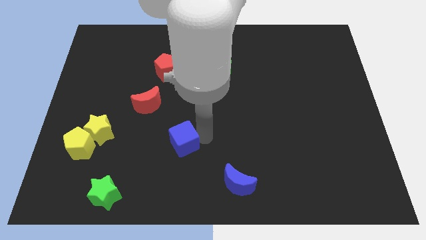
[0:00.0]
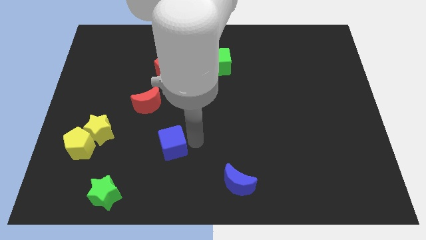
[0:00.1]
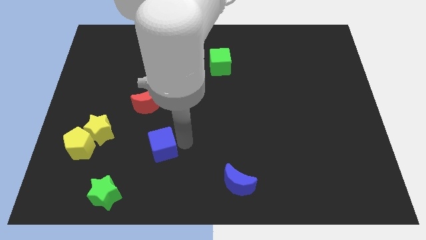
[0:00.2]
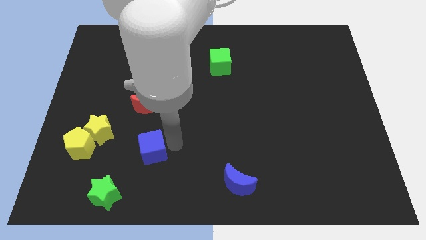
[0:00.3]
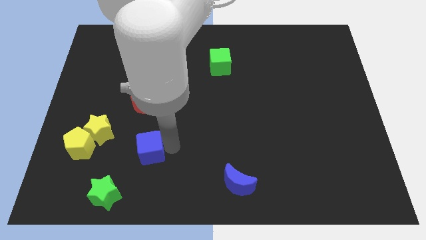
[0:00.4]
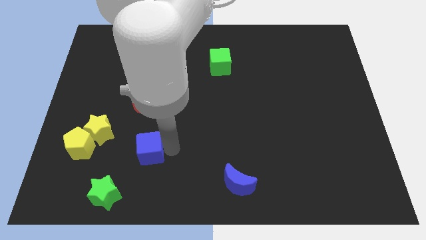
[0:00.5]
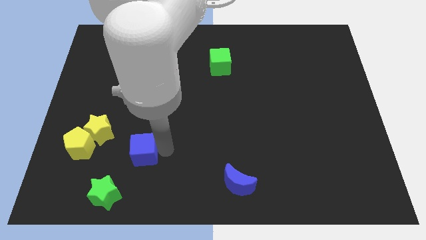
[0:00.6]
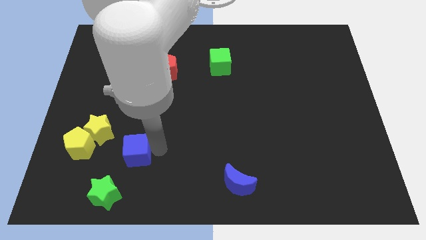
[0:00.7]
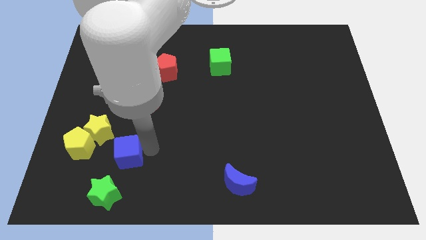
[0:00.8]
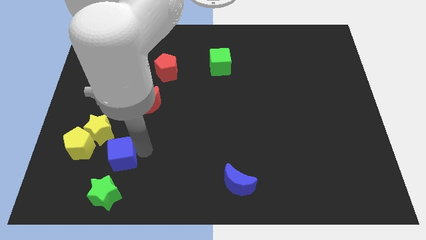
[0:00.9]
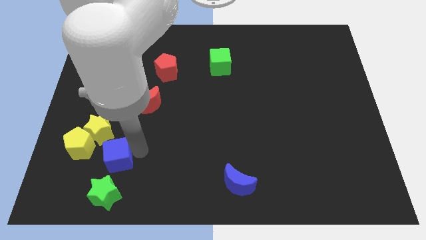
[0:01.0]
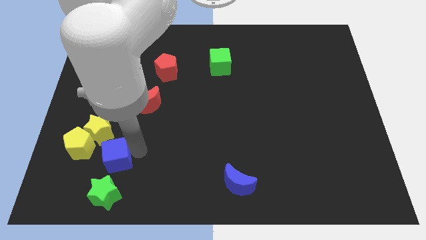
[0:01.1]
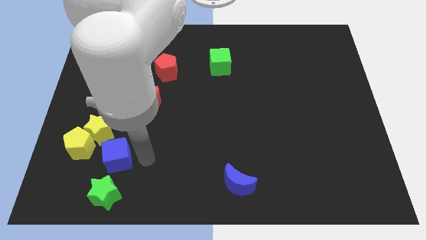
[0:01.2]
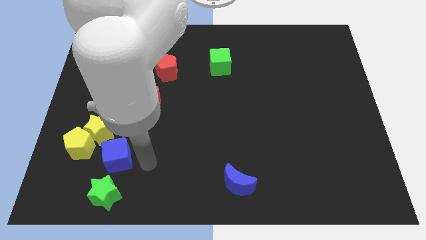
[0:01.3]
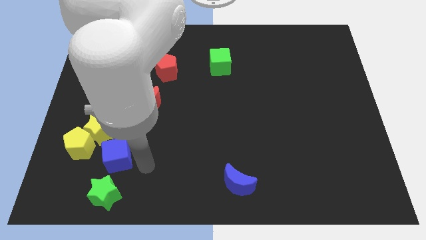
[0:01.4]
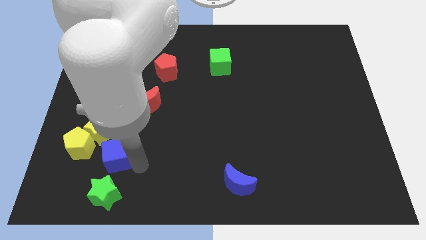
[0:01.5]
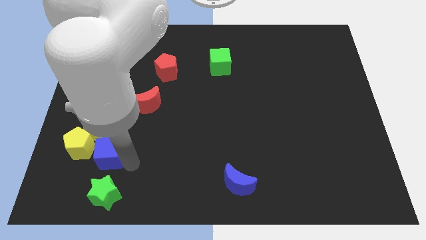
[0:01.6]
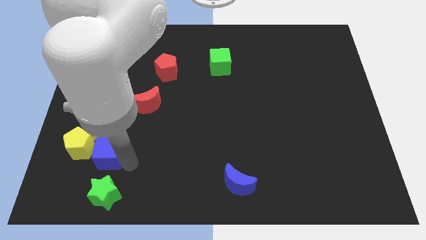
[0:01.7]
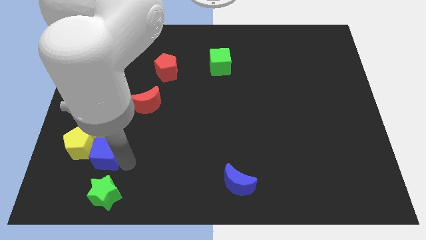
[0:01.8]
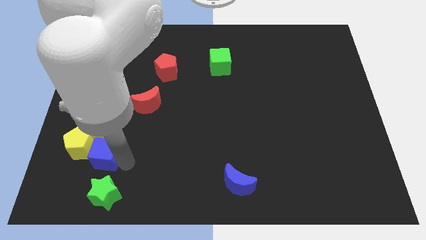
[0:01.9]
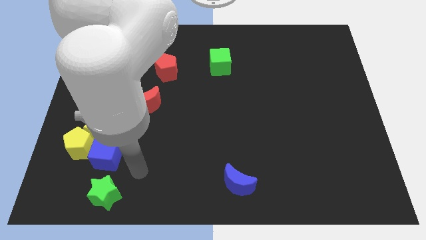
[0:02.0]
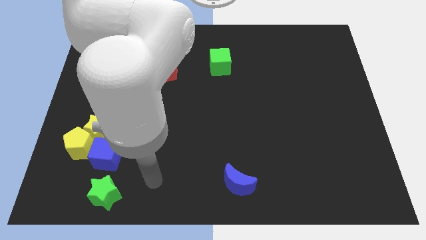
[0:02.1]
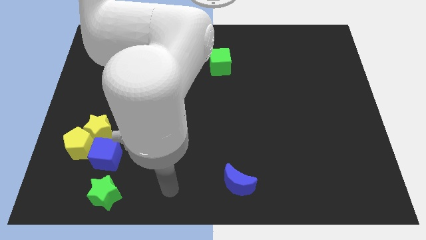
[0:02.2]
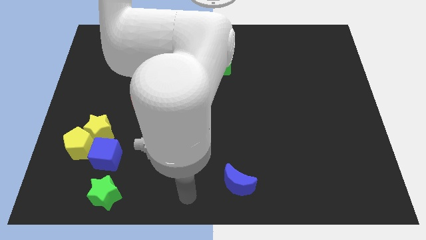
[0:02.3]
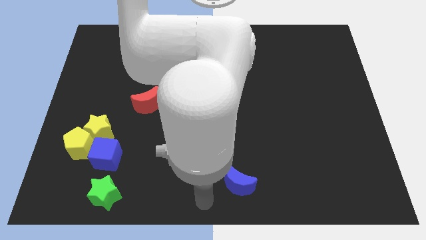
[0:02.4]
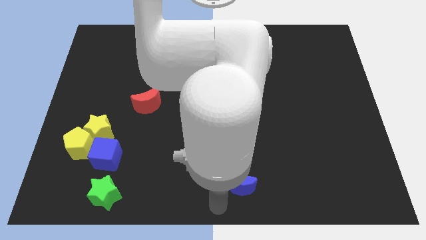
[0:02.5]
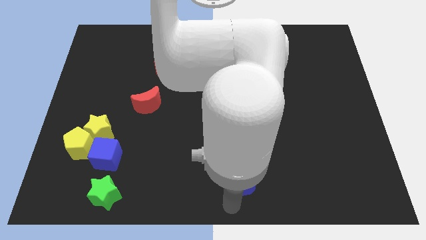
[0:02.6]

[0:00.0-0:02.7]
push blue cube to the left of yellow pentagon

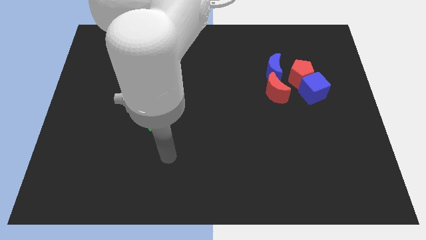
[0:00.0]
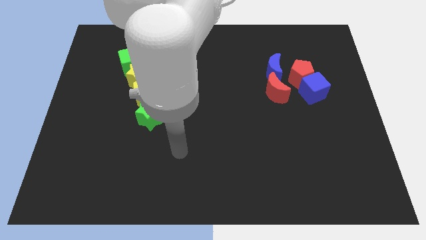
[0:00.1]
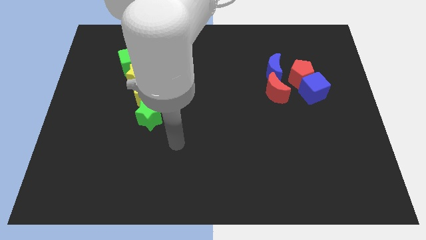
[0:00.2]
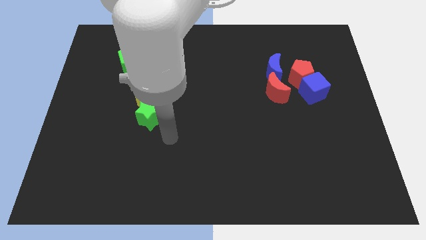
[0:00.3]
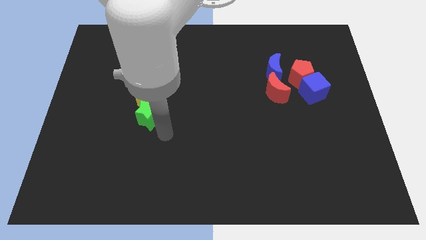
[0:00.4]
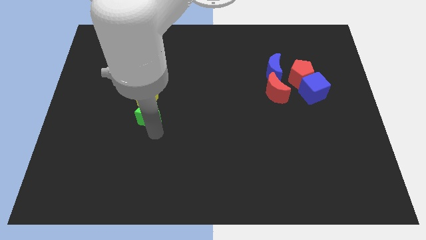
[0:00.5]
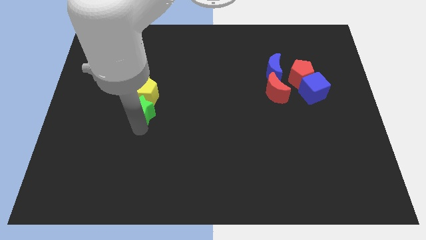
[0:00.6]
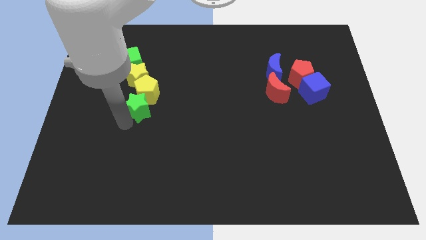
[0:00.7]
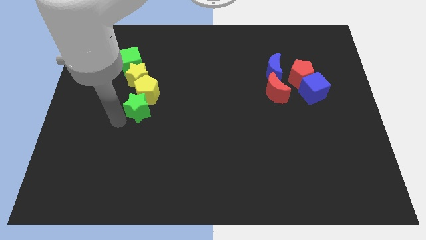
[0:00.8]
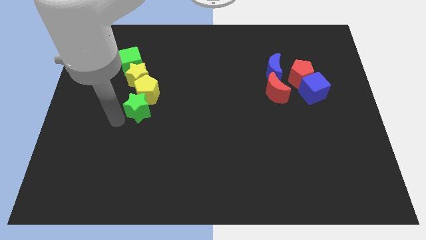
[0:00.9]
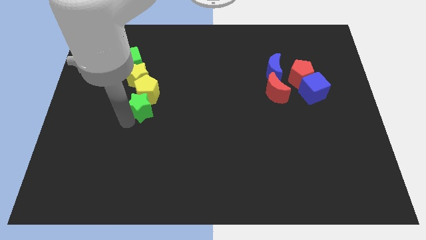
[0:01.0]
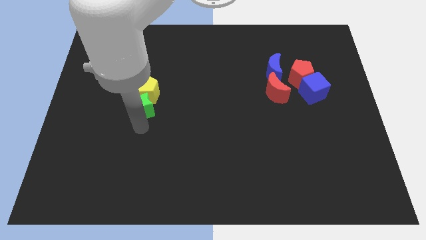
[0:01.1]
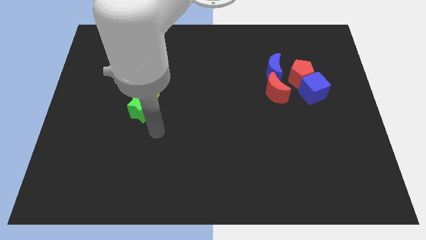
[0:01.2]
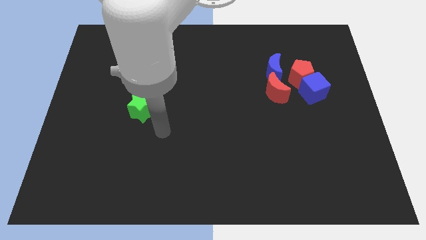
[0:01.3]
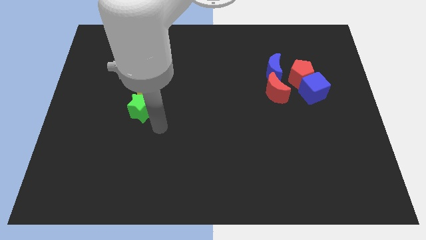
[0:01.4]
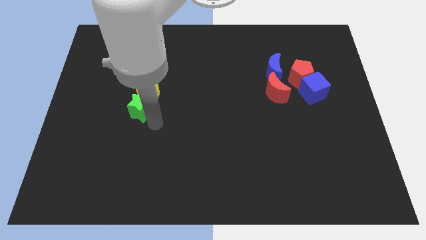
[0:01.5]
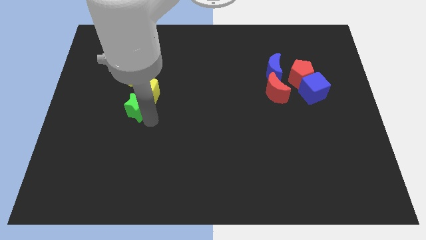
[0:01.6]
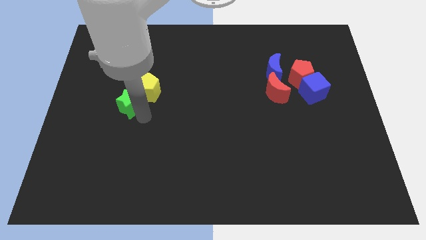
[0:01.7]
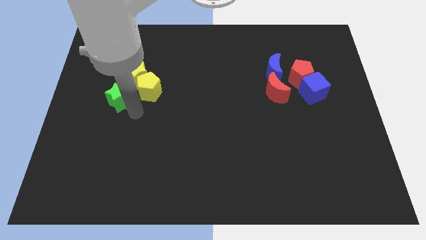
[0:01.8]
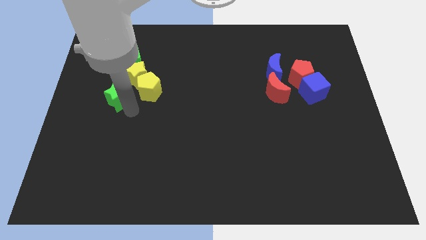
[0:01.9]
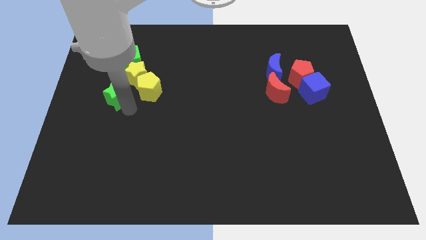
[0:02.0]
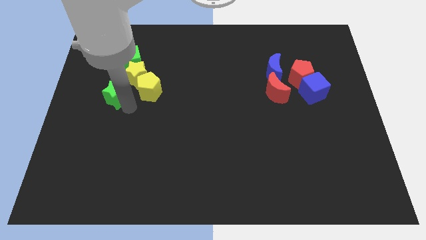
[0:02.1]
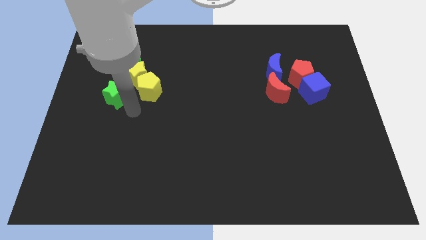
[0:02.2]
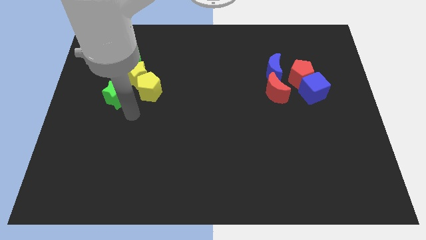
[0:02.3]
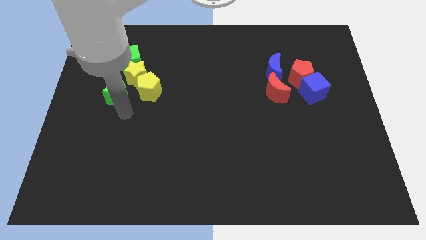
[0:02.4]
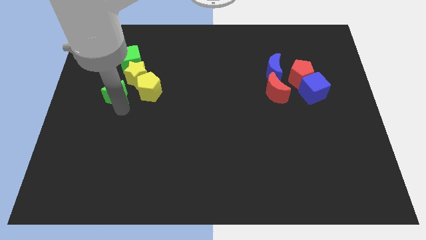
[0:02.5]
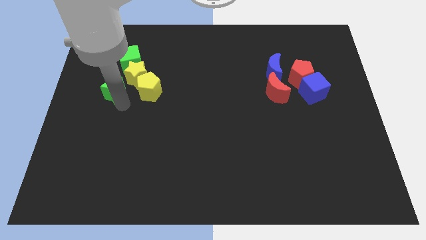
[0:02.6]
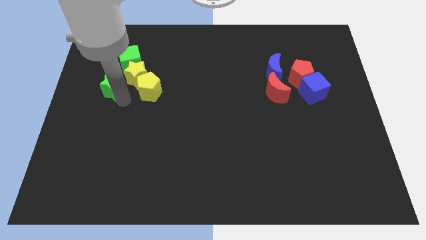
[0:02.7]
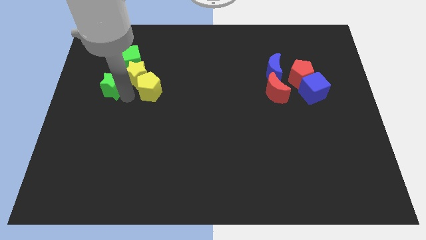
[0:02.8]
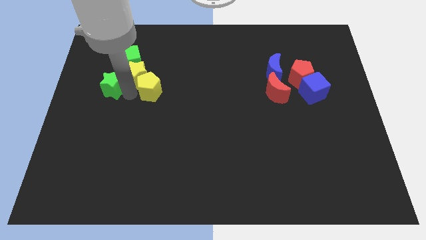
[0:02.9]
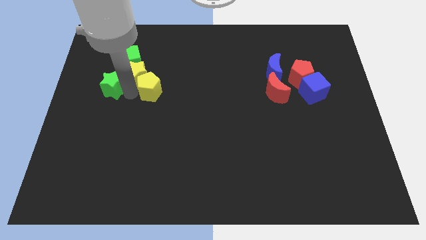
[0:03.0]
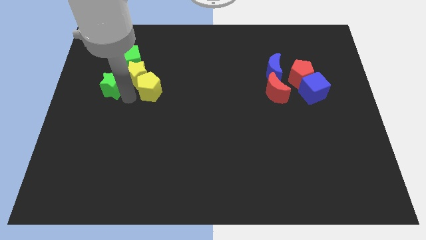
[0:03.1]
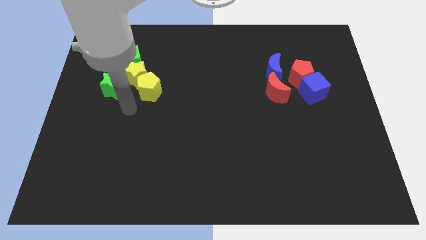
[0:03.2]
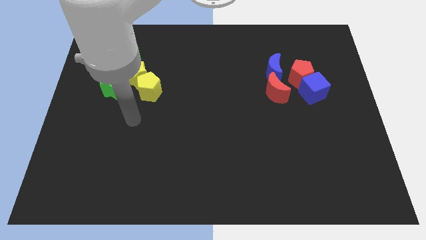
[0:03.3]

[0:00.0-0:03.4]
separate the green star from the vertical line of blocks

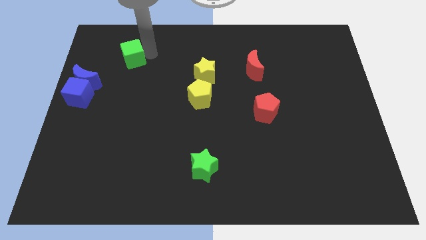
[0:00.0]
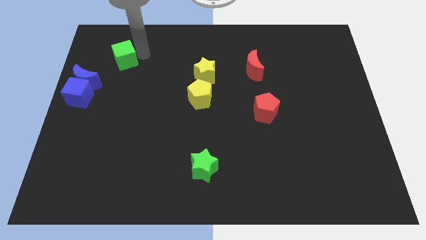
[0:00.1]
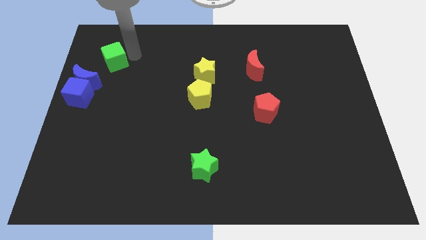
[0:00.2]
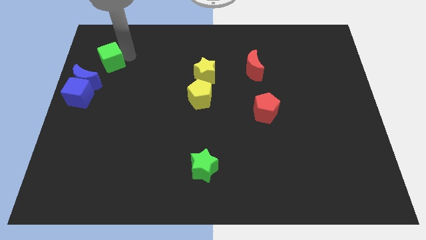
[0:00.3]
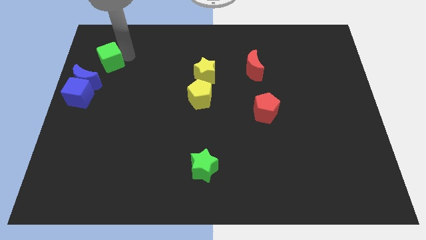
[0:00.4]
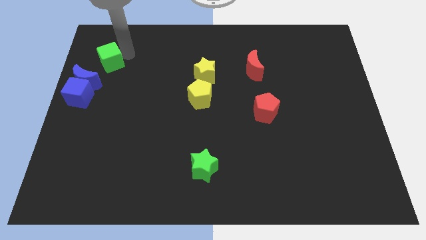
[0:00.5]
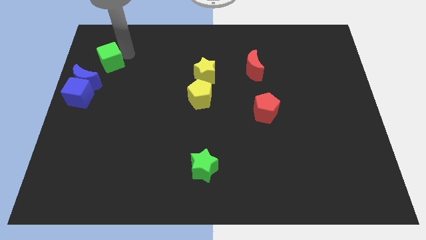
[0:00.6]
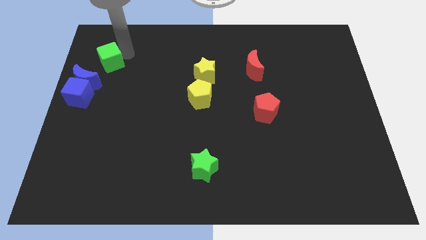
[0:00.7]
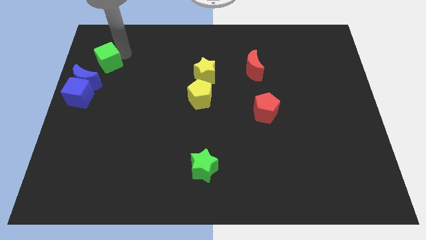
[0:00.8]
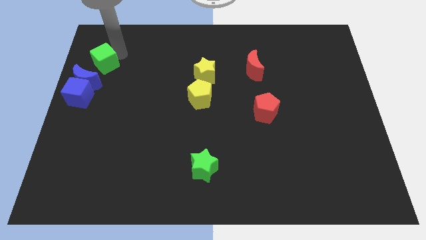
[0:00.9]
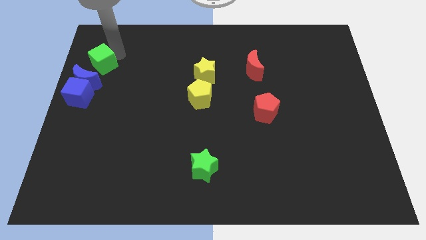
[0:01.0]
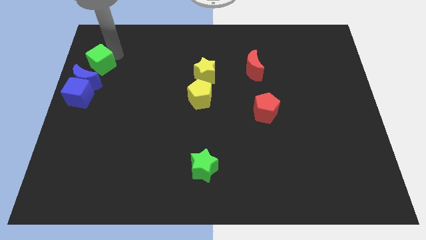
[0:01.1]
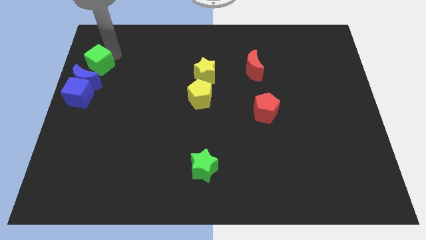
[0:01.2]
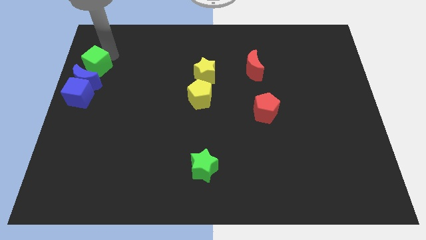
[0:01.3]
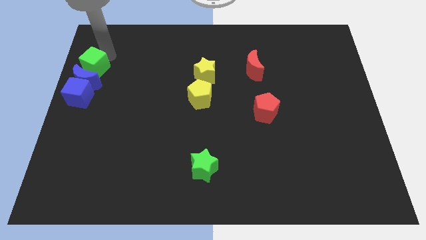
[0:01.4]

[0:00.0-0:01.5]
move the green cube vertically above the blue moon

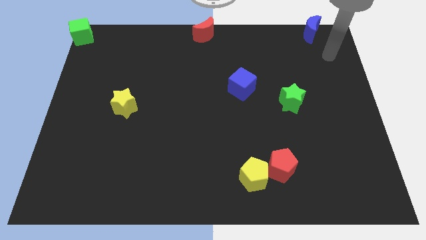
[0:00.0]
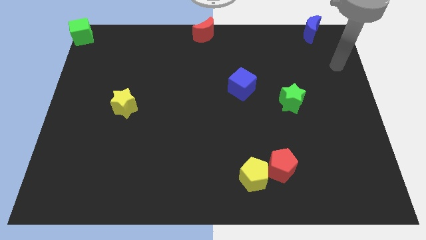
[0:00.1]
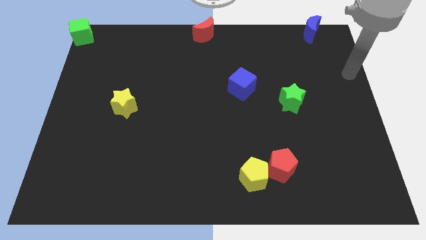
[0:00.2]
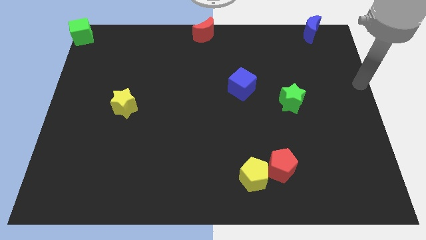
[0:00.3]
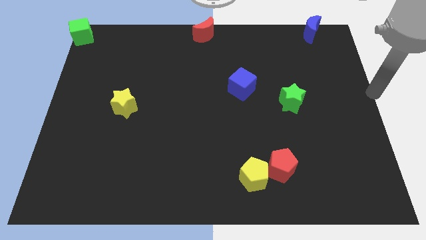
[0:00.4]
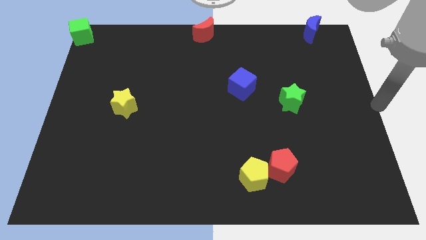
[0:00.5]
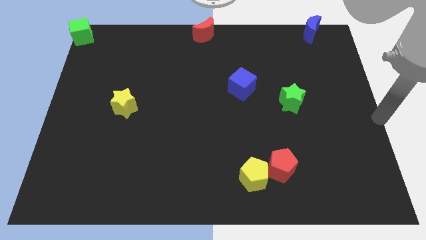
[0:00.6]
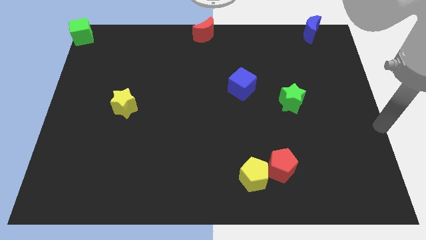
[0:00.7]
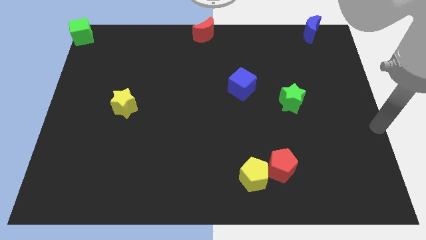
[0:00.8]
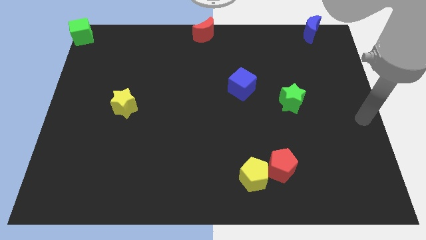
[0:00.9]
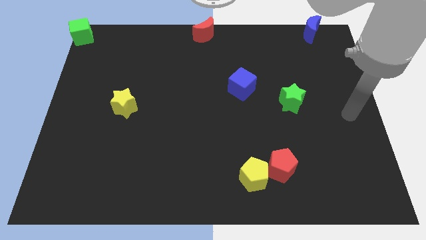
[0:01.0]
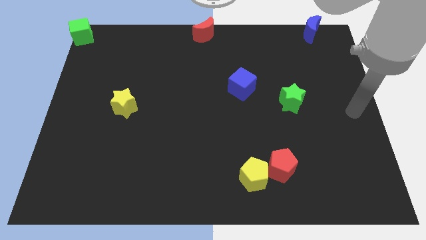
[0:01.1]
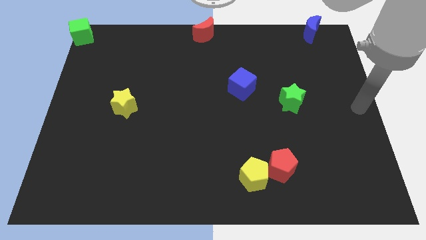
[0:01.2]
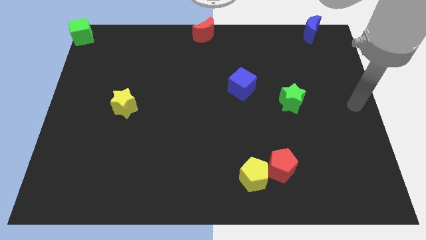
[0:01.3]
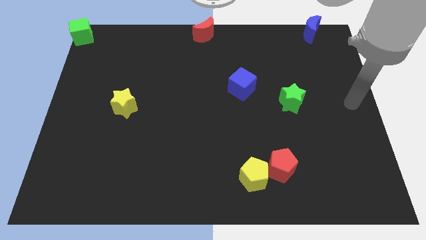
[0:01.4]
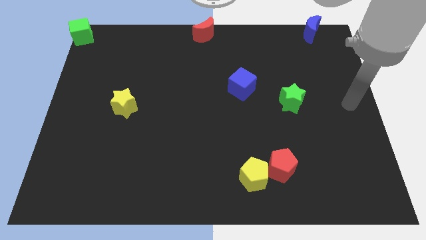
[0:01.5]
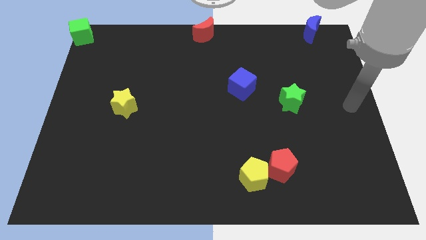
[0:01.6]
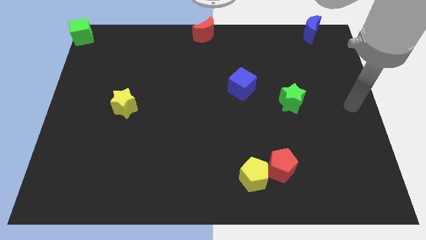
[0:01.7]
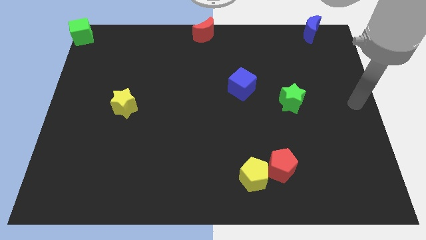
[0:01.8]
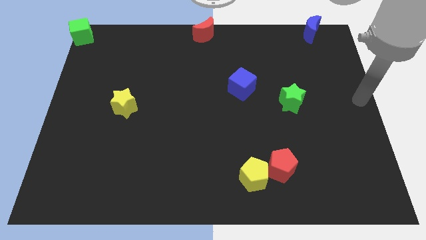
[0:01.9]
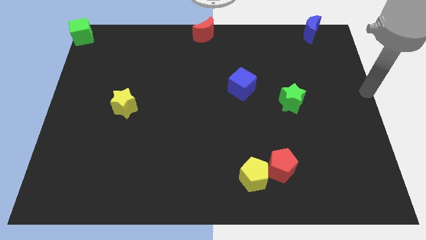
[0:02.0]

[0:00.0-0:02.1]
point the arm at the right center of the board
